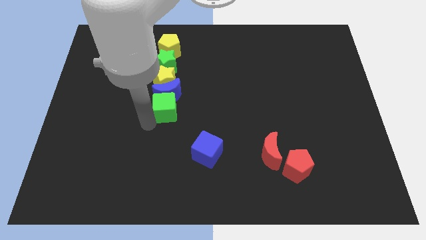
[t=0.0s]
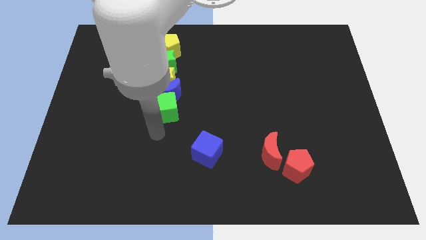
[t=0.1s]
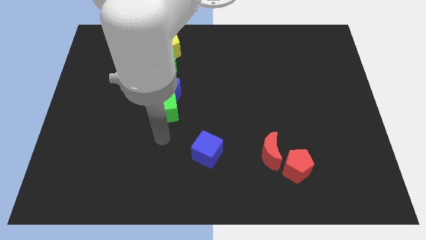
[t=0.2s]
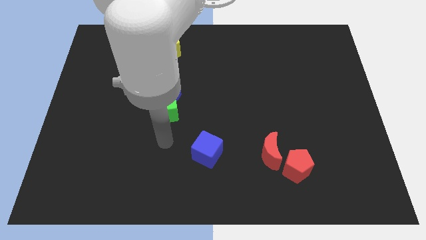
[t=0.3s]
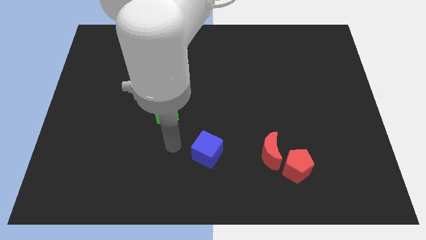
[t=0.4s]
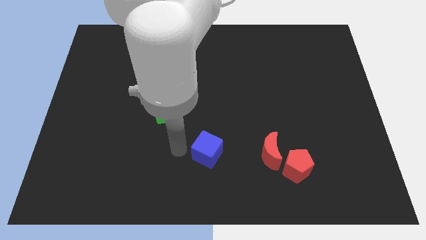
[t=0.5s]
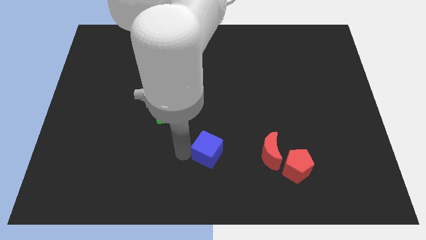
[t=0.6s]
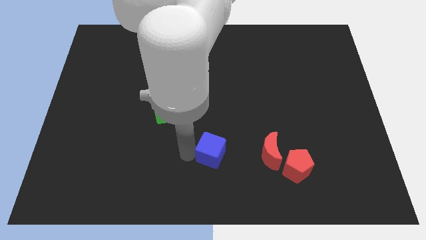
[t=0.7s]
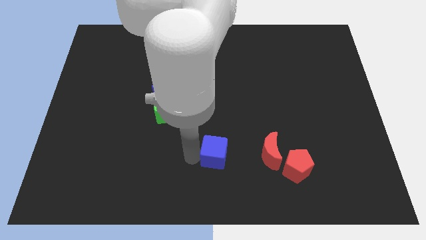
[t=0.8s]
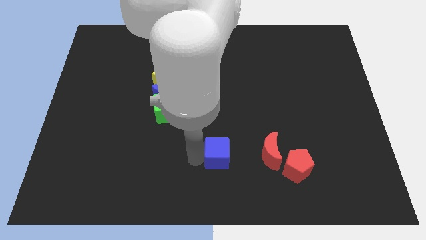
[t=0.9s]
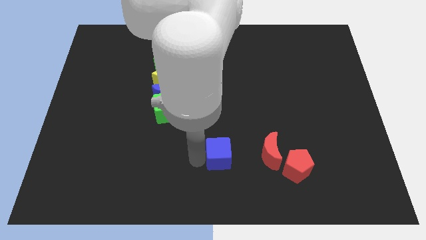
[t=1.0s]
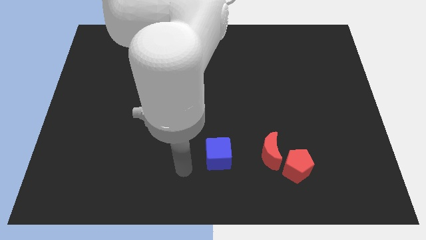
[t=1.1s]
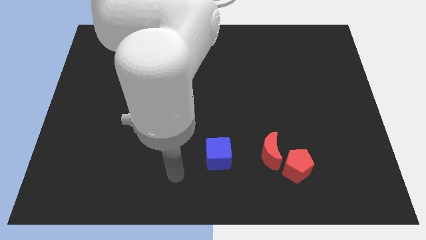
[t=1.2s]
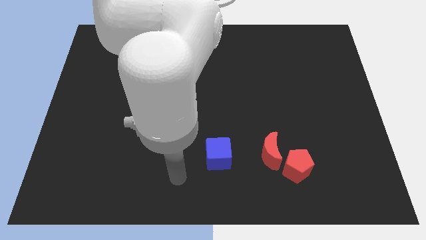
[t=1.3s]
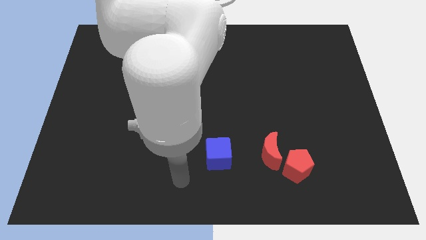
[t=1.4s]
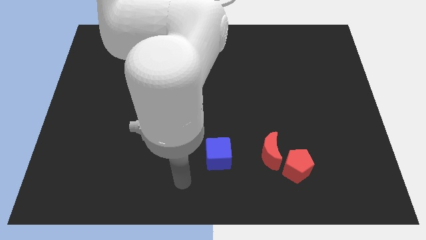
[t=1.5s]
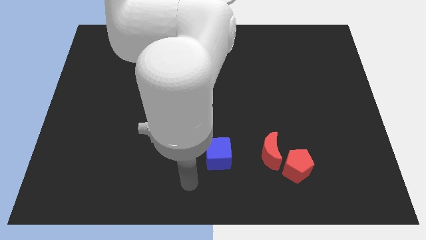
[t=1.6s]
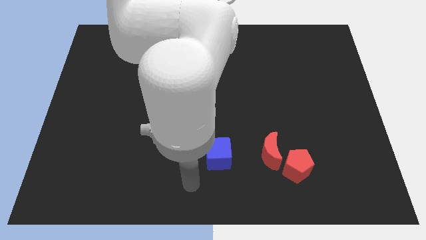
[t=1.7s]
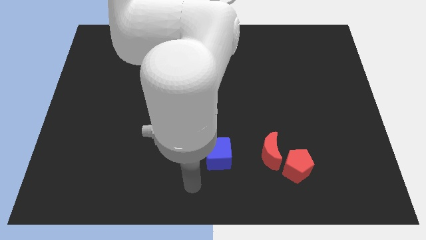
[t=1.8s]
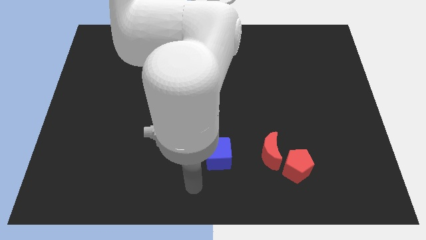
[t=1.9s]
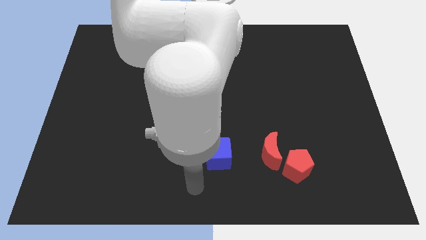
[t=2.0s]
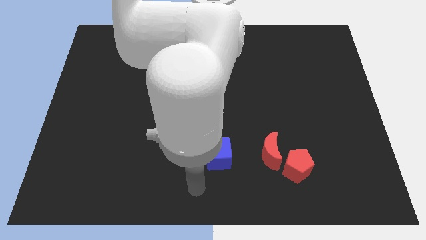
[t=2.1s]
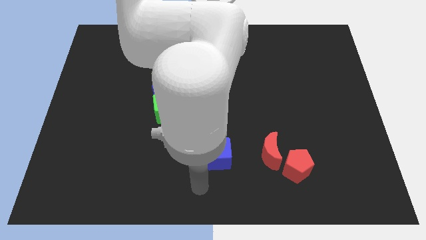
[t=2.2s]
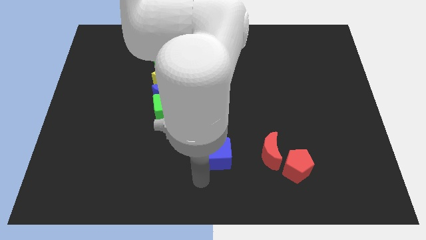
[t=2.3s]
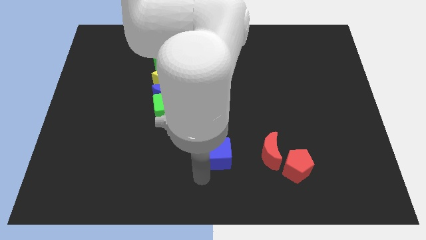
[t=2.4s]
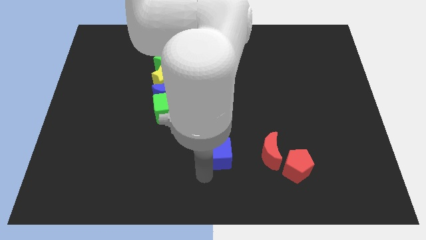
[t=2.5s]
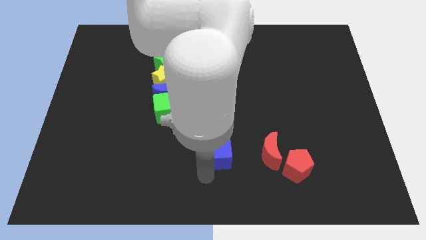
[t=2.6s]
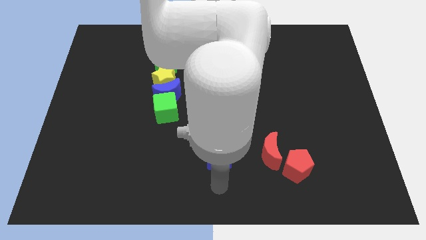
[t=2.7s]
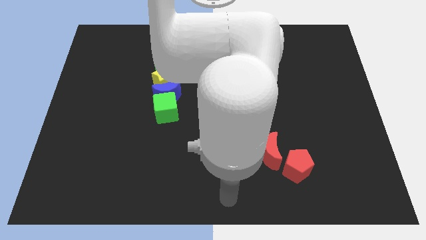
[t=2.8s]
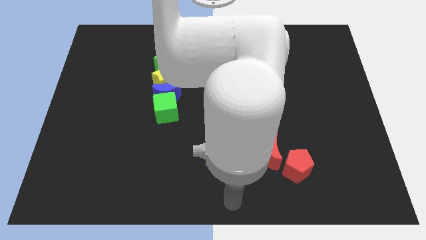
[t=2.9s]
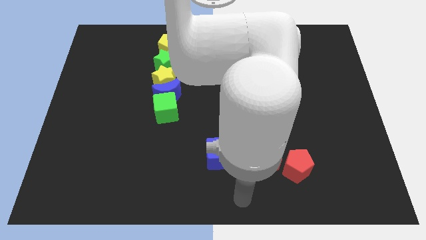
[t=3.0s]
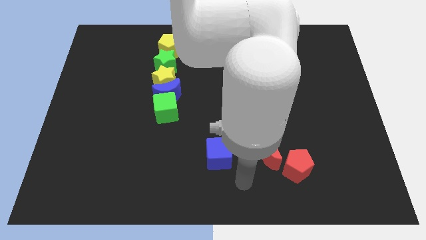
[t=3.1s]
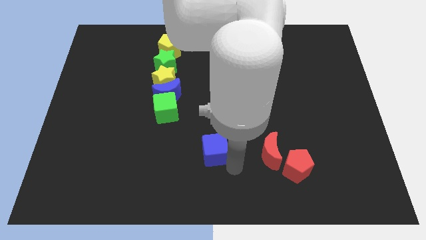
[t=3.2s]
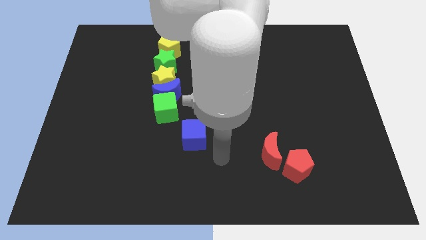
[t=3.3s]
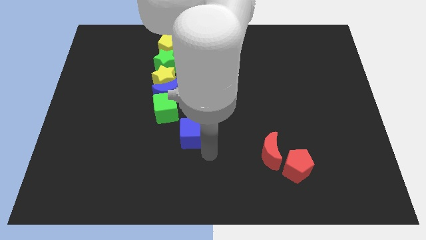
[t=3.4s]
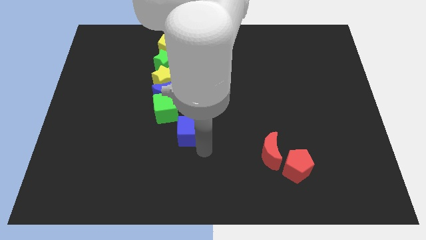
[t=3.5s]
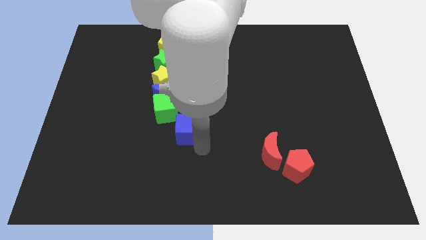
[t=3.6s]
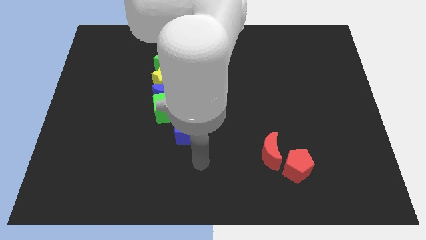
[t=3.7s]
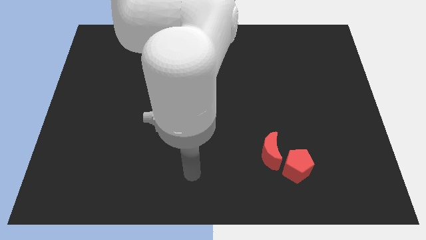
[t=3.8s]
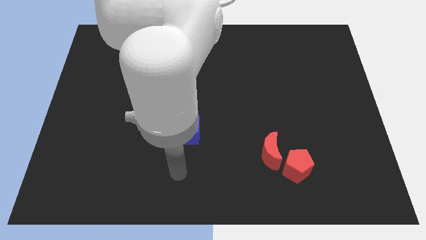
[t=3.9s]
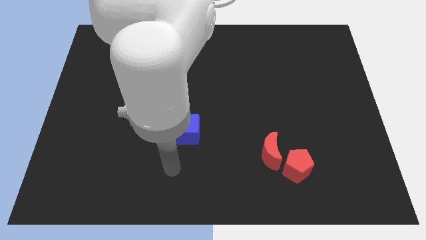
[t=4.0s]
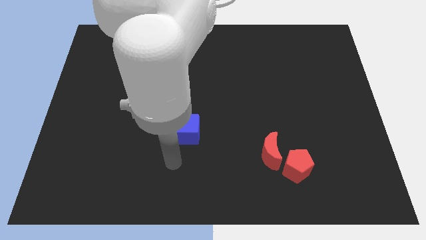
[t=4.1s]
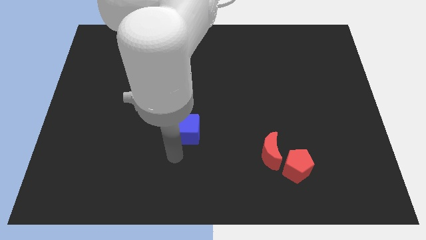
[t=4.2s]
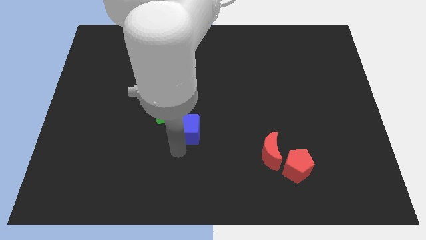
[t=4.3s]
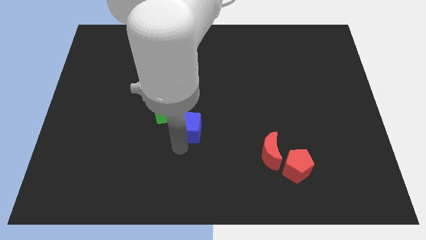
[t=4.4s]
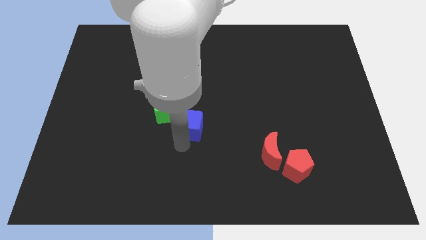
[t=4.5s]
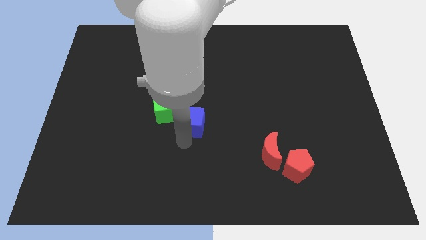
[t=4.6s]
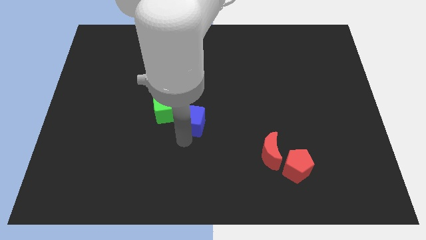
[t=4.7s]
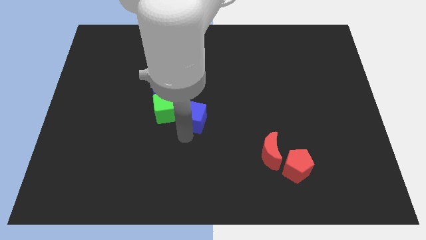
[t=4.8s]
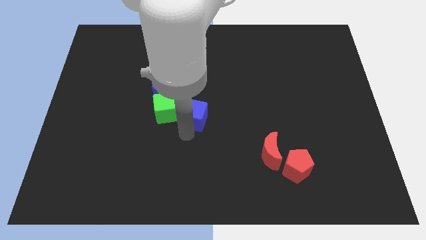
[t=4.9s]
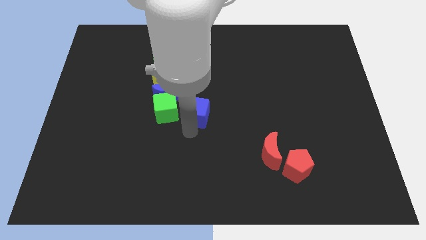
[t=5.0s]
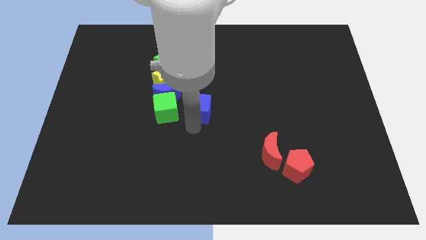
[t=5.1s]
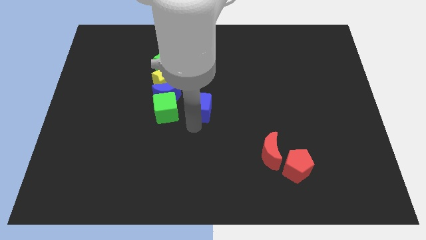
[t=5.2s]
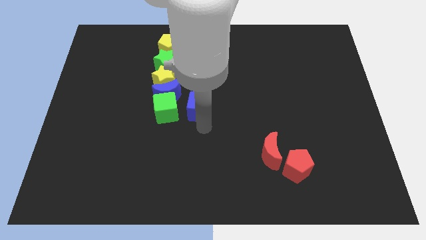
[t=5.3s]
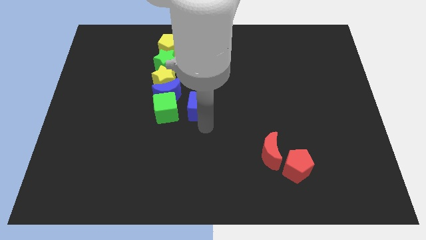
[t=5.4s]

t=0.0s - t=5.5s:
place the blue cube diagonal to the right to the green cube

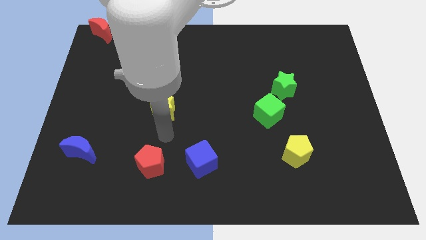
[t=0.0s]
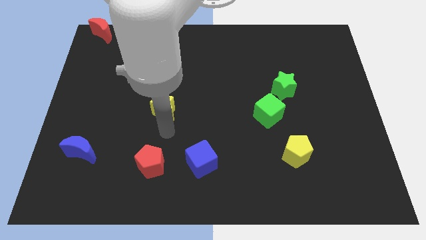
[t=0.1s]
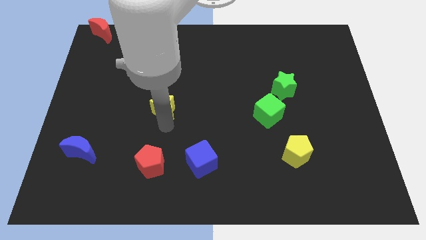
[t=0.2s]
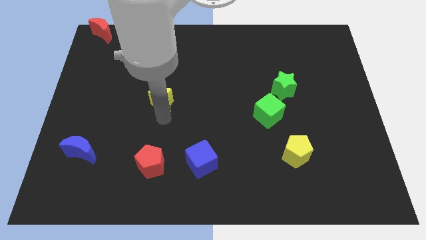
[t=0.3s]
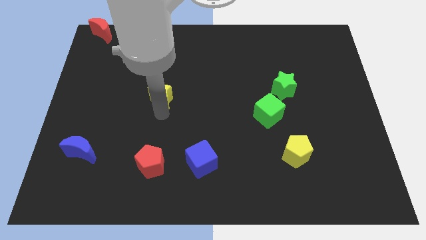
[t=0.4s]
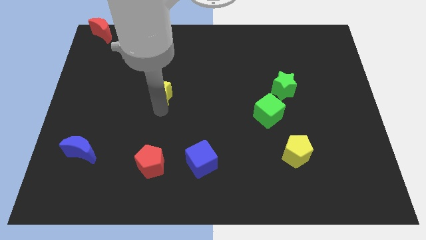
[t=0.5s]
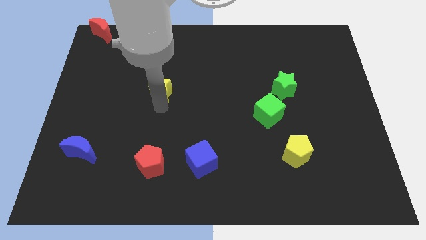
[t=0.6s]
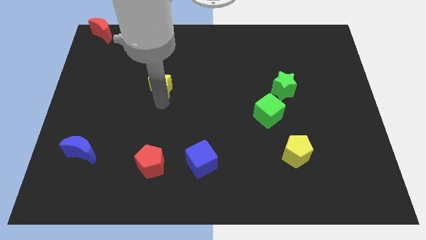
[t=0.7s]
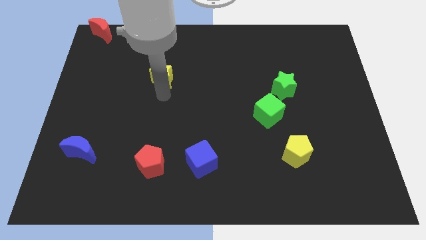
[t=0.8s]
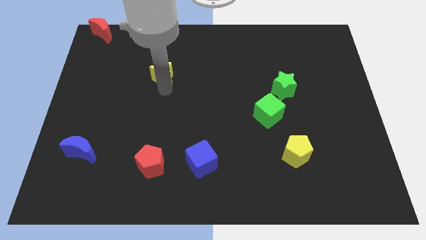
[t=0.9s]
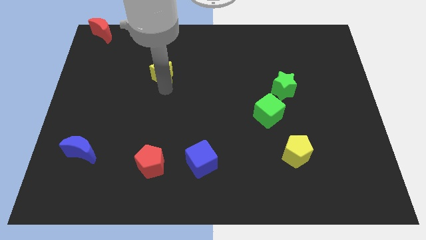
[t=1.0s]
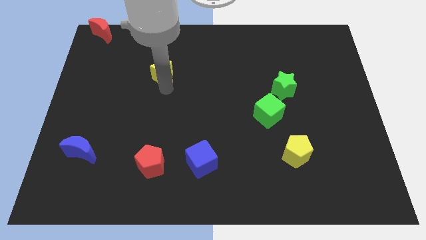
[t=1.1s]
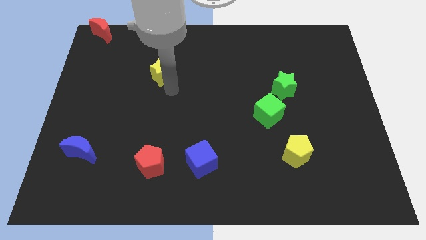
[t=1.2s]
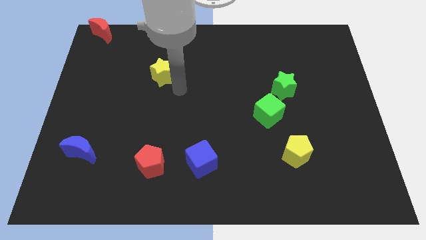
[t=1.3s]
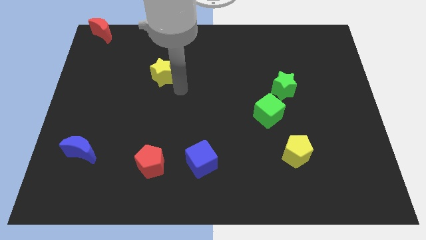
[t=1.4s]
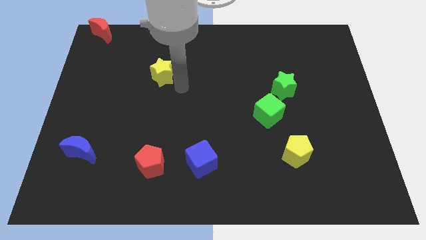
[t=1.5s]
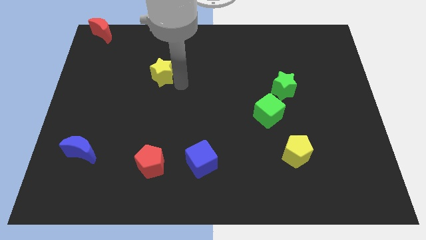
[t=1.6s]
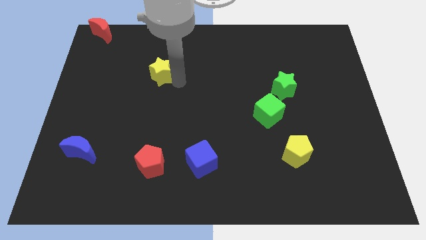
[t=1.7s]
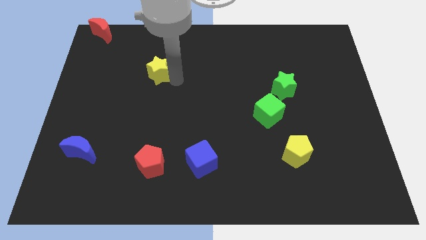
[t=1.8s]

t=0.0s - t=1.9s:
push yellow star slightly upwards

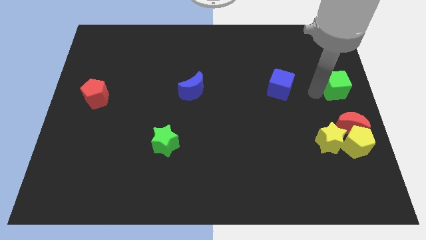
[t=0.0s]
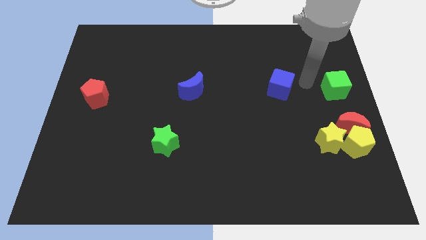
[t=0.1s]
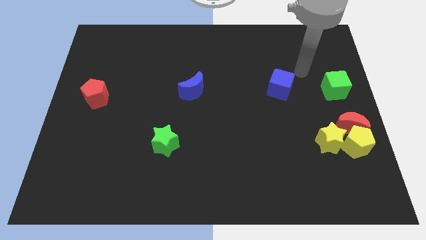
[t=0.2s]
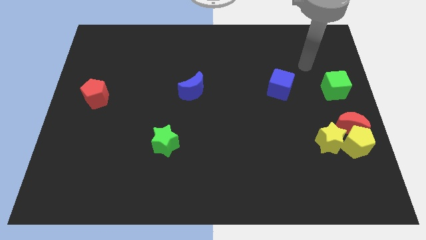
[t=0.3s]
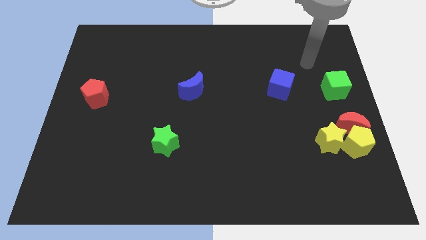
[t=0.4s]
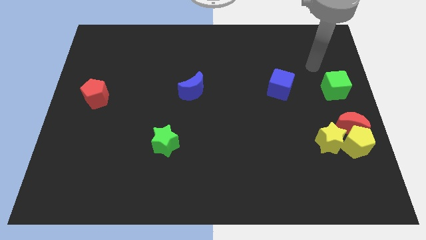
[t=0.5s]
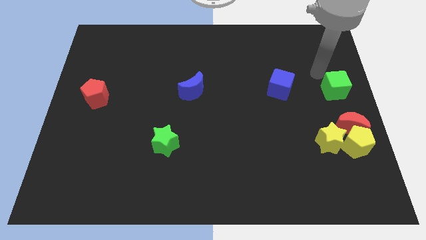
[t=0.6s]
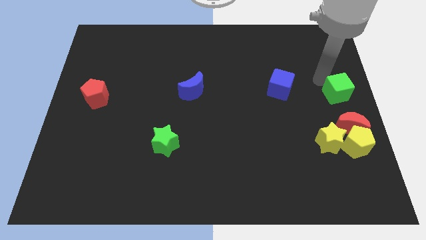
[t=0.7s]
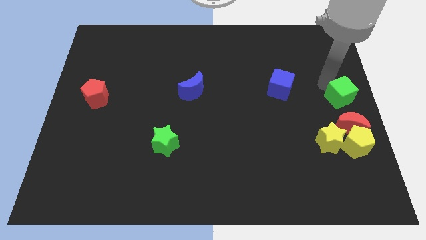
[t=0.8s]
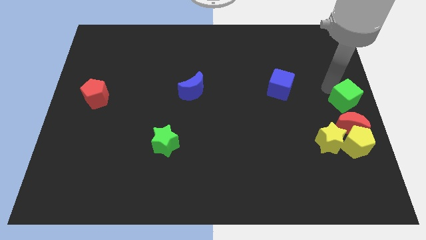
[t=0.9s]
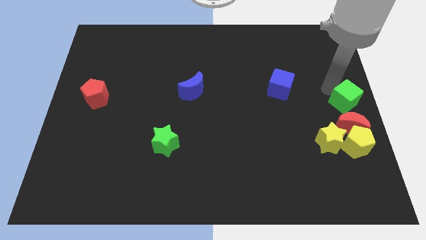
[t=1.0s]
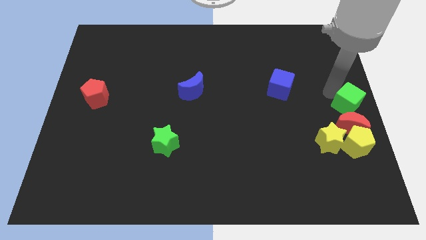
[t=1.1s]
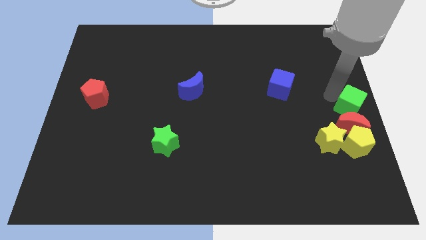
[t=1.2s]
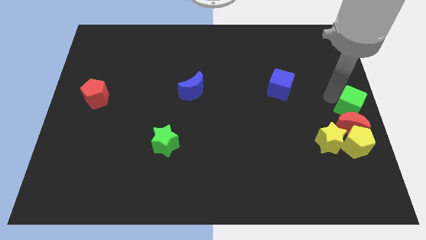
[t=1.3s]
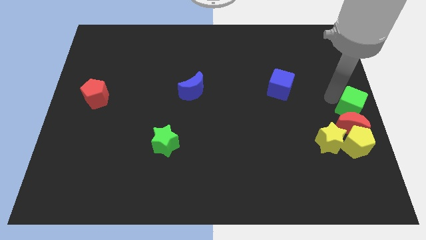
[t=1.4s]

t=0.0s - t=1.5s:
push the green cube above the red moon
